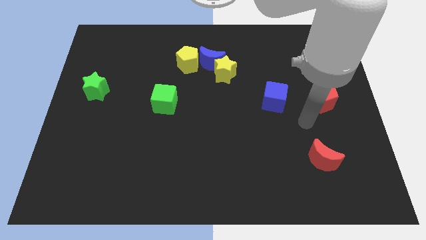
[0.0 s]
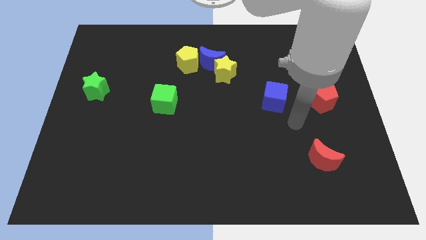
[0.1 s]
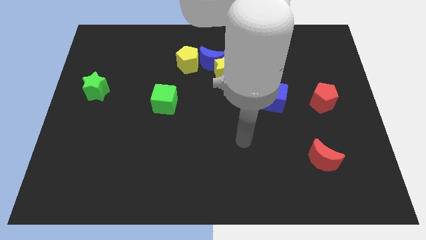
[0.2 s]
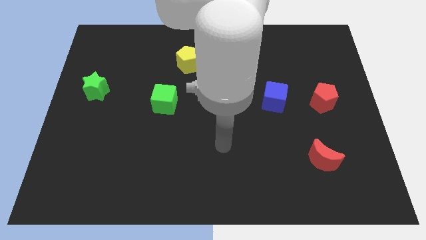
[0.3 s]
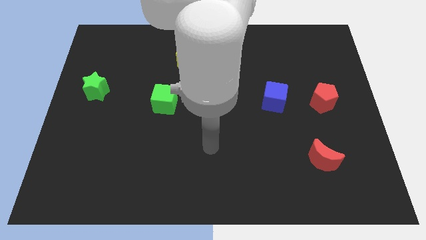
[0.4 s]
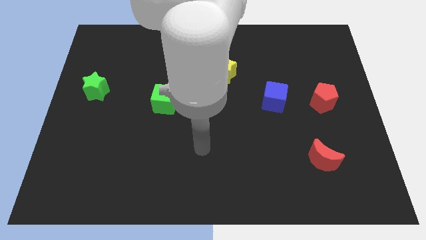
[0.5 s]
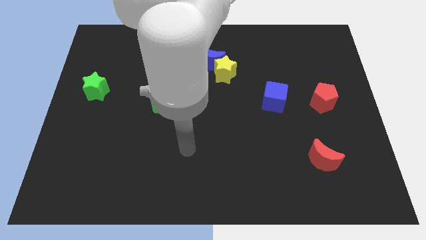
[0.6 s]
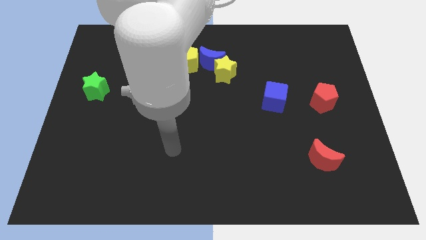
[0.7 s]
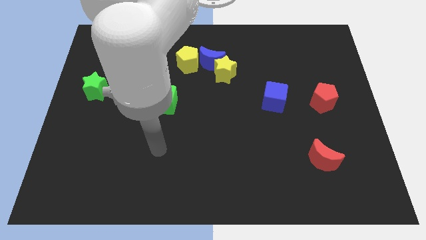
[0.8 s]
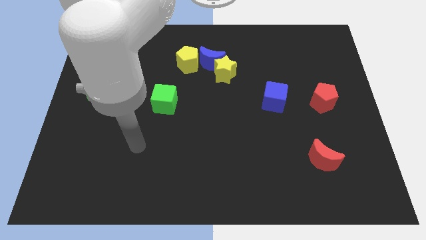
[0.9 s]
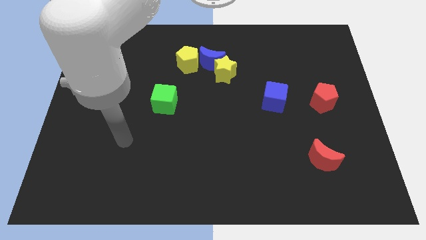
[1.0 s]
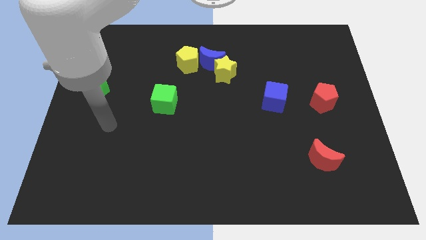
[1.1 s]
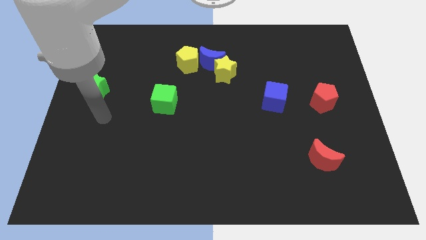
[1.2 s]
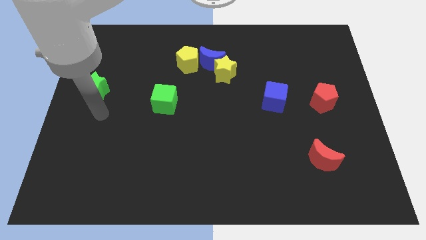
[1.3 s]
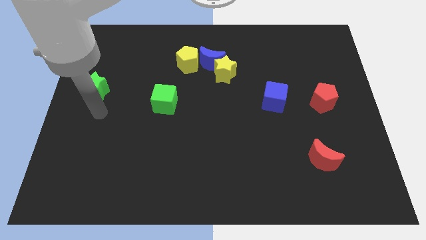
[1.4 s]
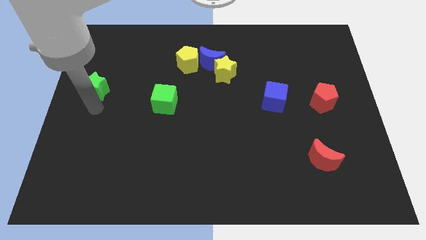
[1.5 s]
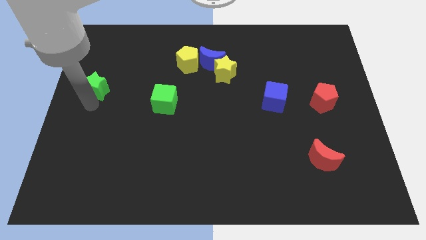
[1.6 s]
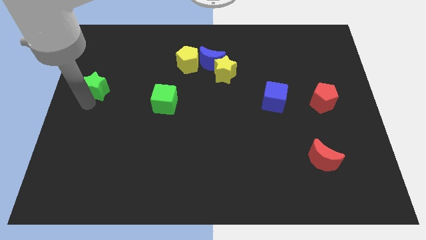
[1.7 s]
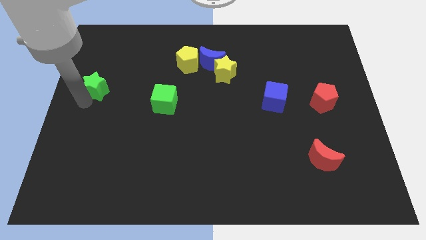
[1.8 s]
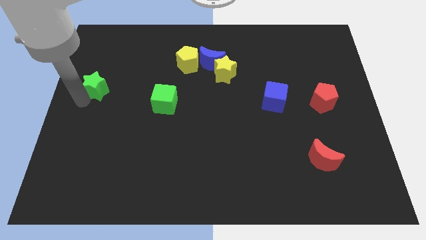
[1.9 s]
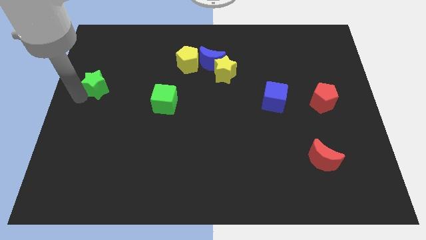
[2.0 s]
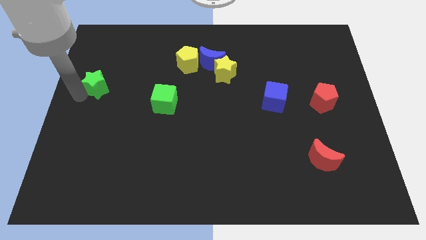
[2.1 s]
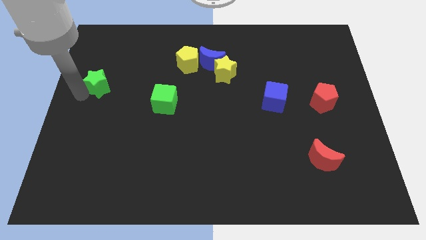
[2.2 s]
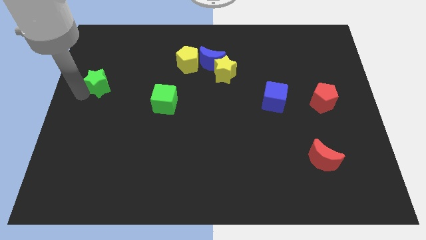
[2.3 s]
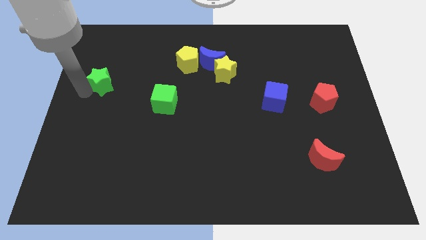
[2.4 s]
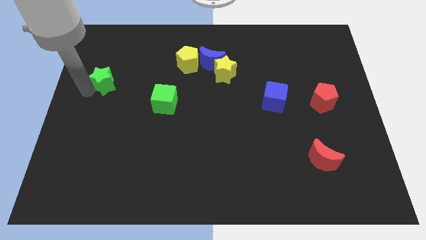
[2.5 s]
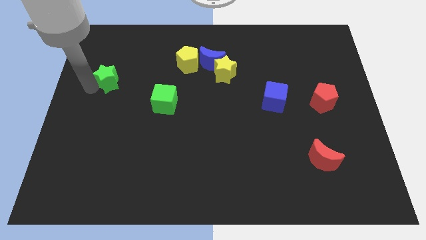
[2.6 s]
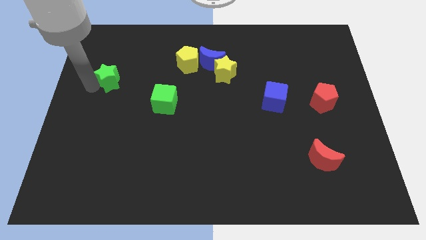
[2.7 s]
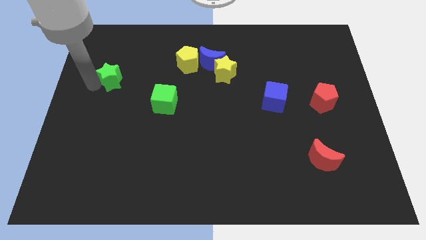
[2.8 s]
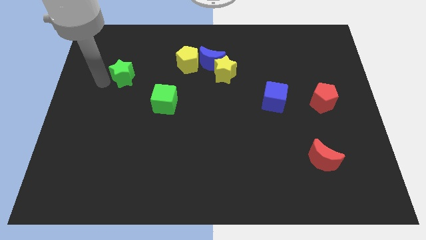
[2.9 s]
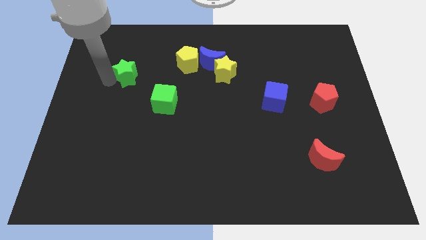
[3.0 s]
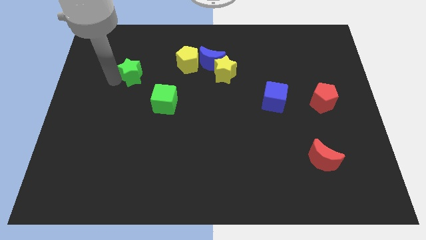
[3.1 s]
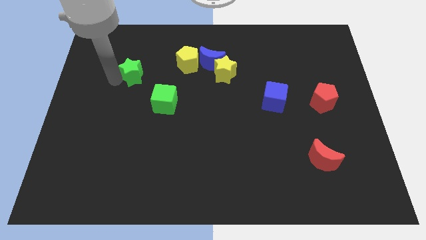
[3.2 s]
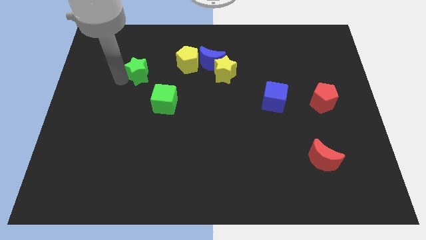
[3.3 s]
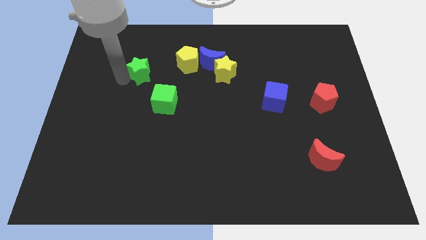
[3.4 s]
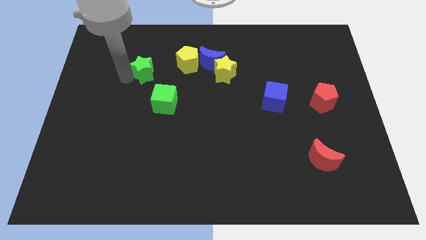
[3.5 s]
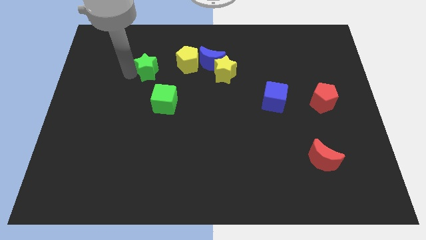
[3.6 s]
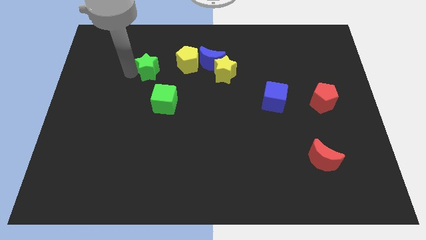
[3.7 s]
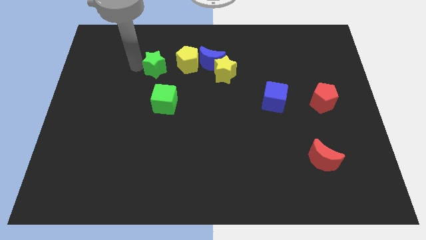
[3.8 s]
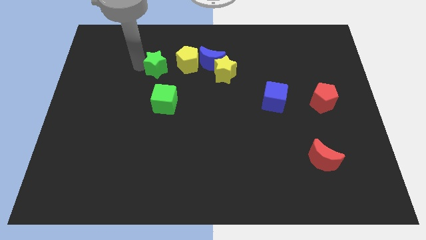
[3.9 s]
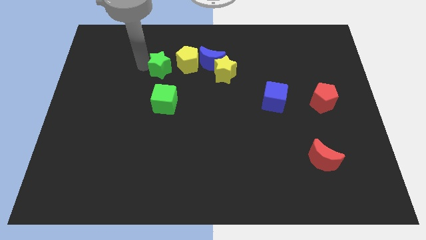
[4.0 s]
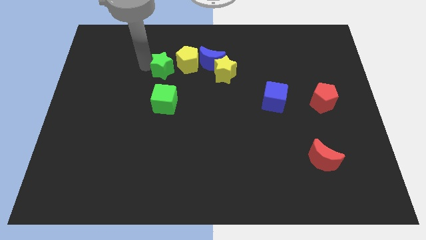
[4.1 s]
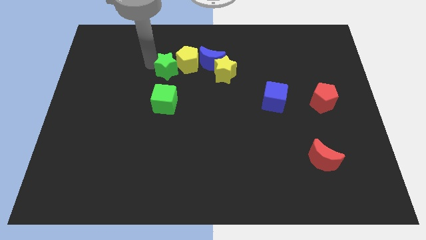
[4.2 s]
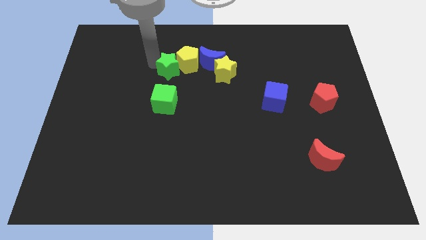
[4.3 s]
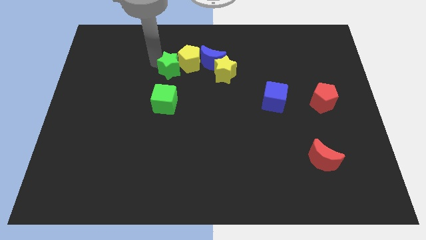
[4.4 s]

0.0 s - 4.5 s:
put the green star to the yellow pentagon

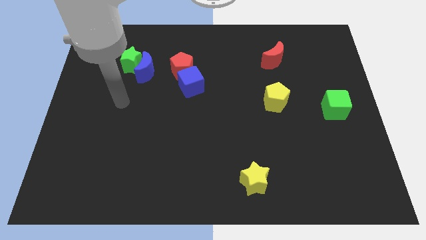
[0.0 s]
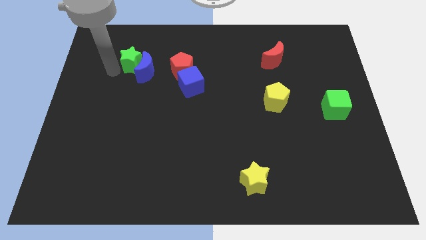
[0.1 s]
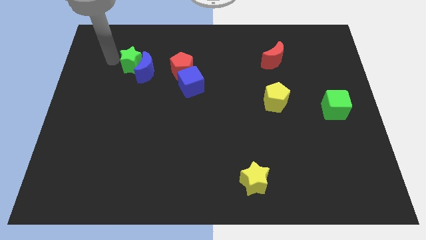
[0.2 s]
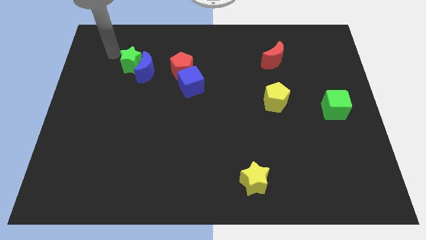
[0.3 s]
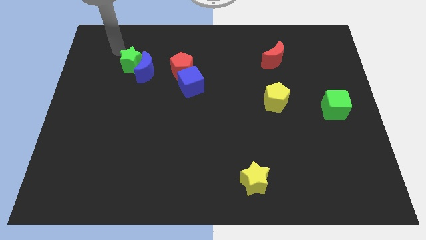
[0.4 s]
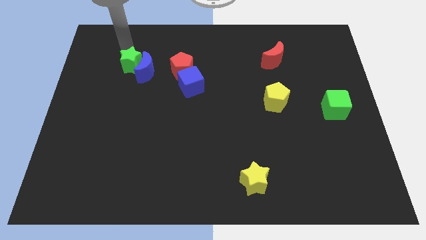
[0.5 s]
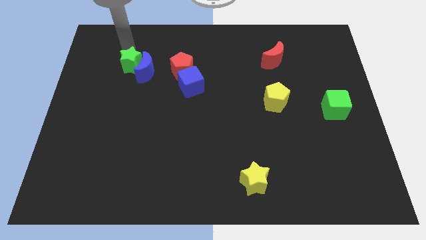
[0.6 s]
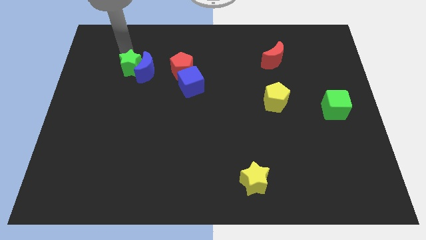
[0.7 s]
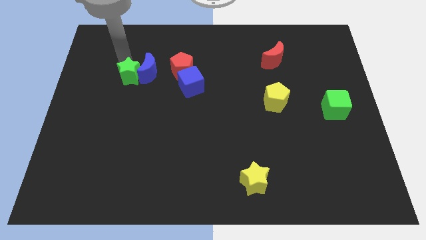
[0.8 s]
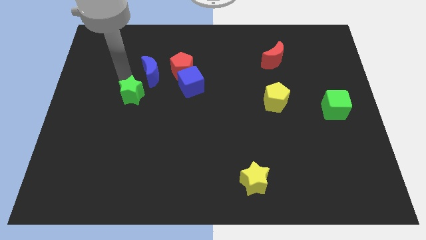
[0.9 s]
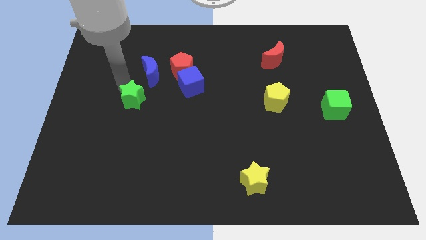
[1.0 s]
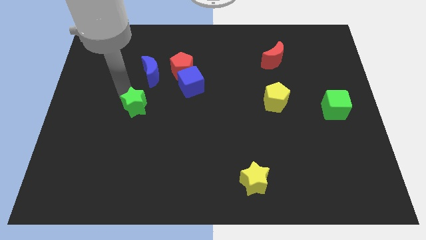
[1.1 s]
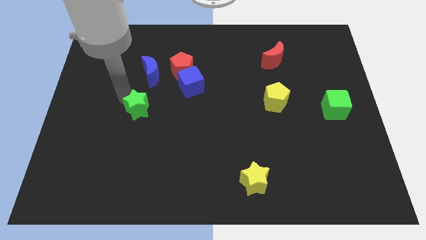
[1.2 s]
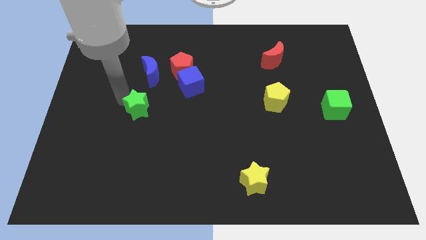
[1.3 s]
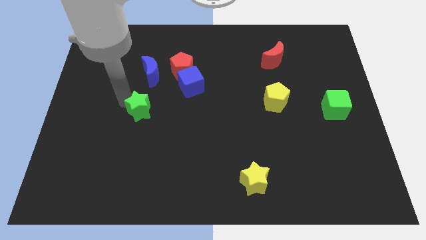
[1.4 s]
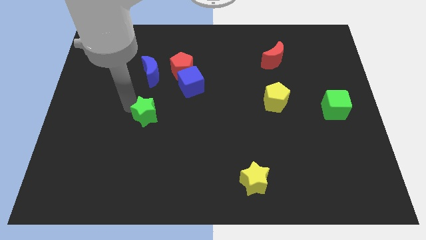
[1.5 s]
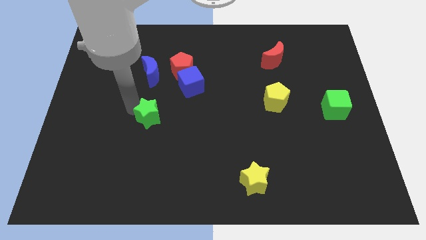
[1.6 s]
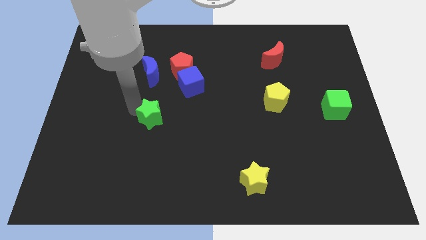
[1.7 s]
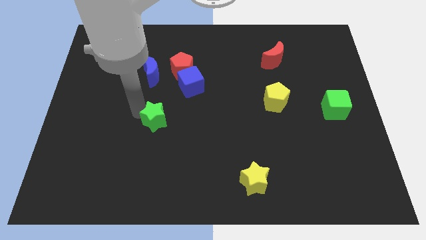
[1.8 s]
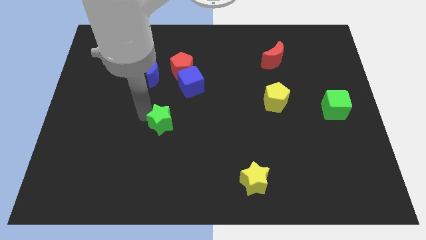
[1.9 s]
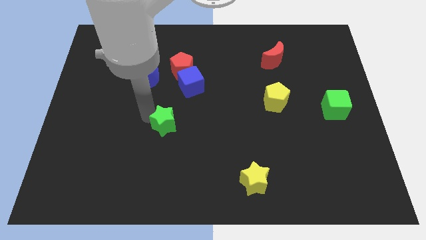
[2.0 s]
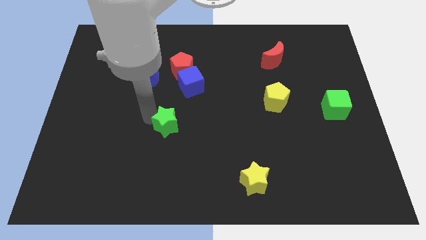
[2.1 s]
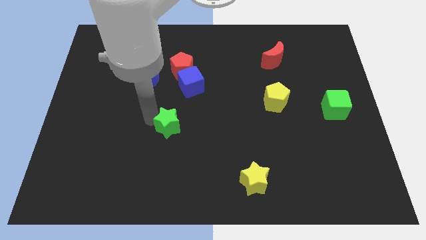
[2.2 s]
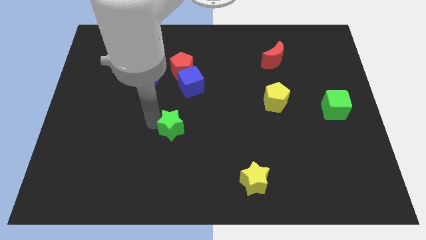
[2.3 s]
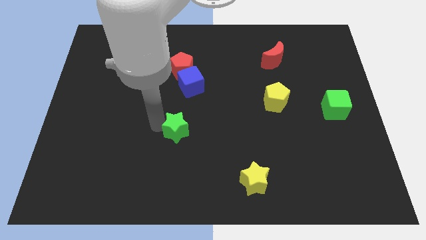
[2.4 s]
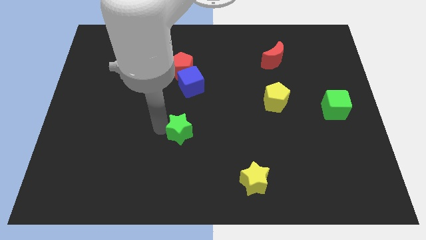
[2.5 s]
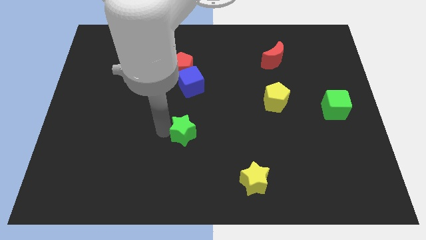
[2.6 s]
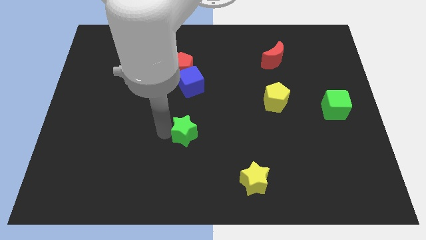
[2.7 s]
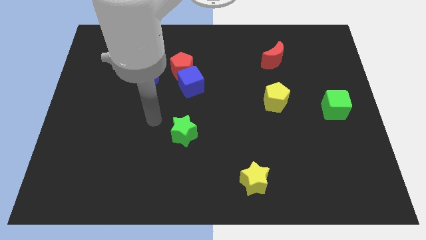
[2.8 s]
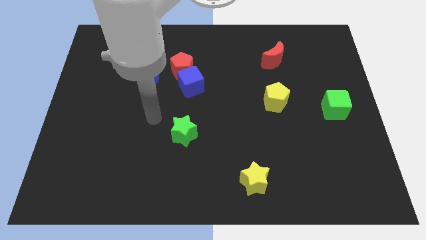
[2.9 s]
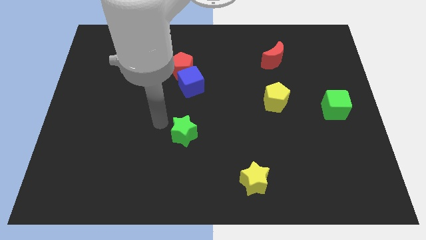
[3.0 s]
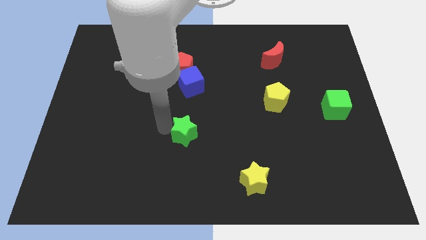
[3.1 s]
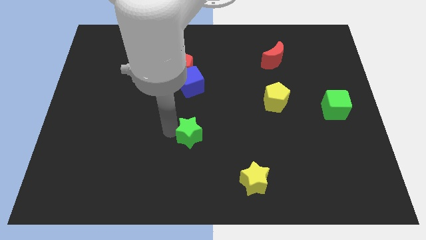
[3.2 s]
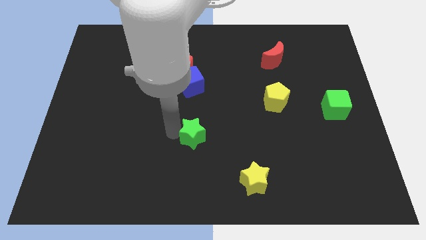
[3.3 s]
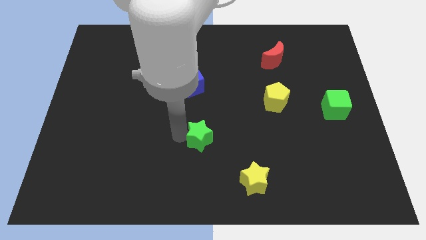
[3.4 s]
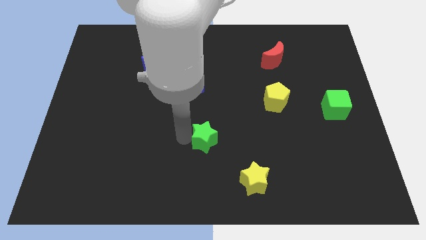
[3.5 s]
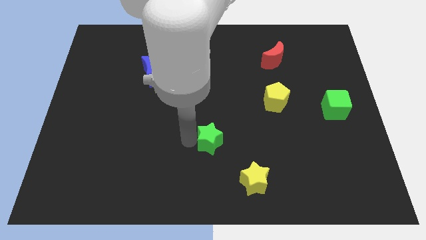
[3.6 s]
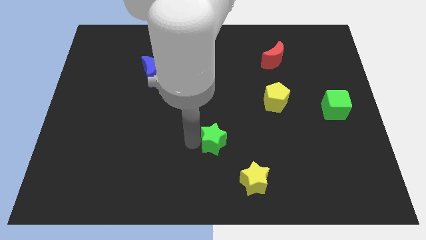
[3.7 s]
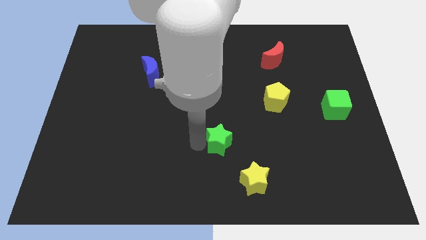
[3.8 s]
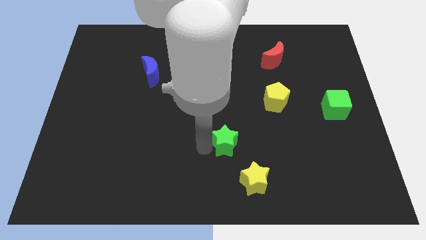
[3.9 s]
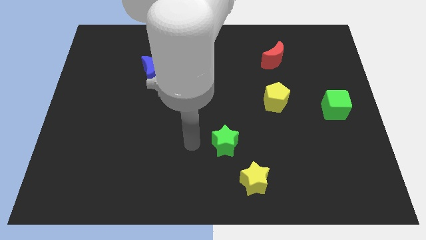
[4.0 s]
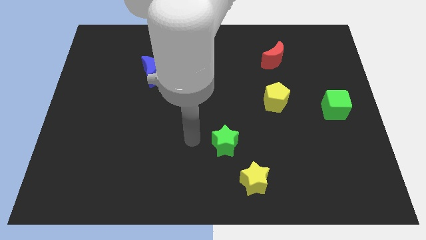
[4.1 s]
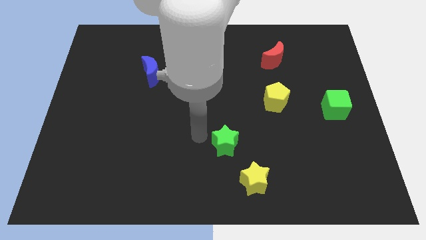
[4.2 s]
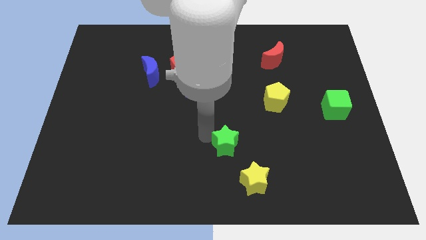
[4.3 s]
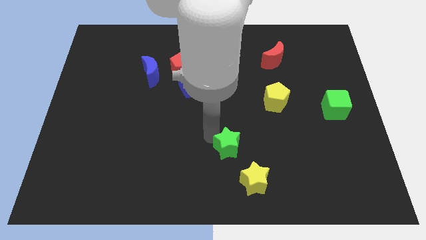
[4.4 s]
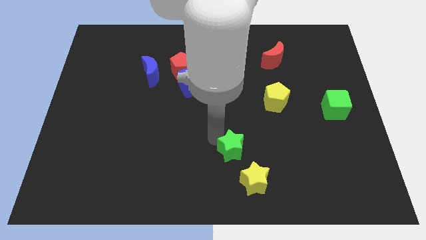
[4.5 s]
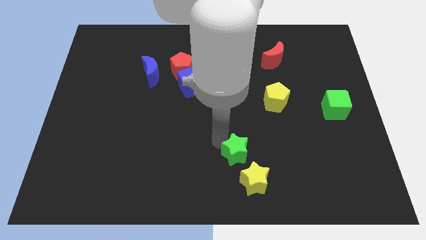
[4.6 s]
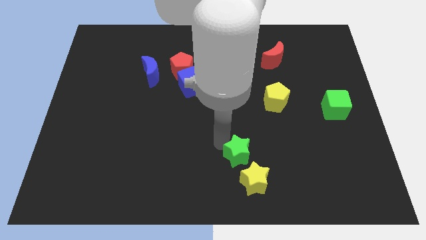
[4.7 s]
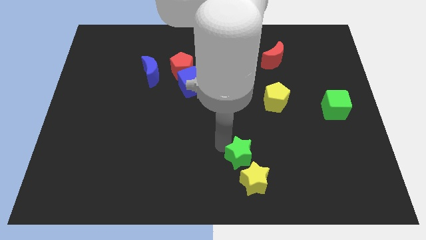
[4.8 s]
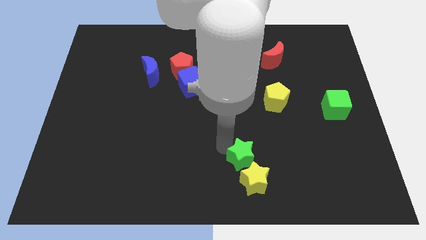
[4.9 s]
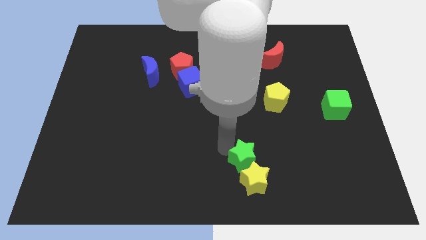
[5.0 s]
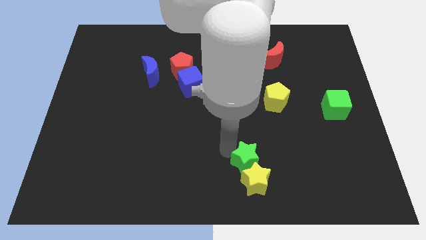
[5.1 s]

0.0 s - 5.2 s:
push the green star close to the yellow star
